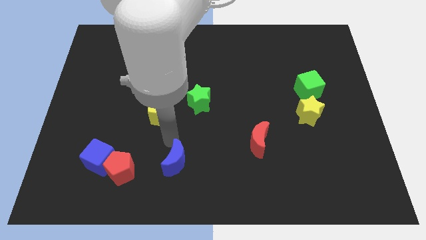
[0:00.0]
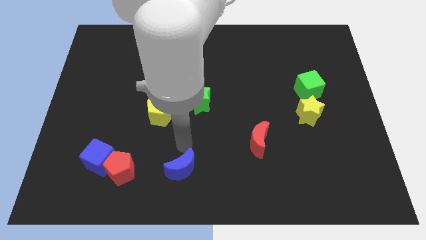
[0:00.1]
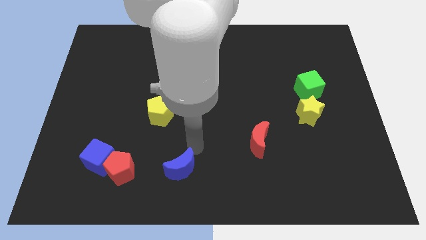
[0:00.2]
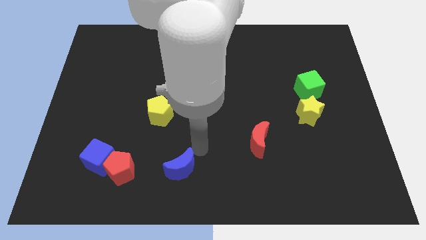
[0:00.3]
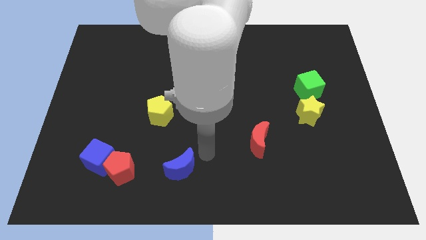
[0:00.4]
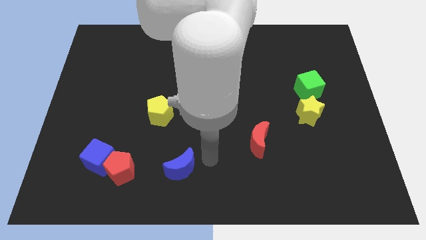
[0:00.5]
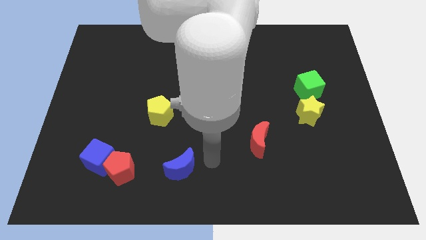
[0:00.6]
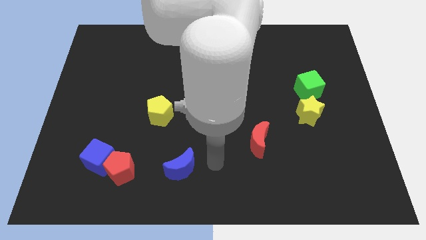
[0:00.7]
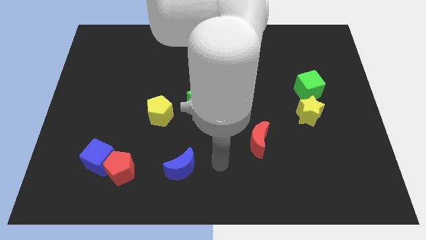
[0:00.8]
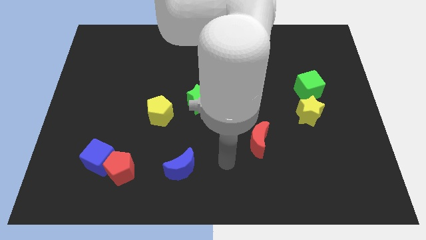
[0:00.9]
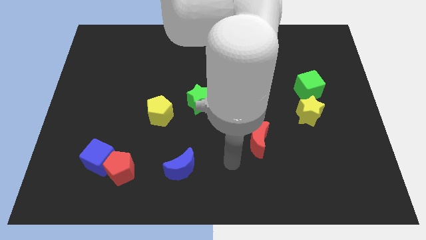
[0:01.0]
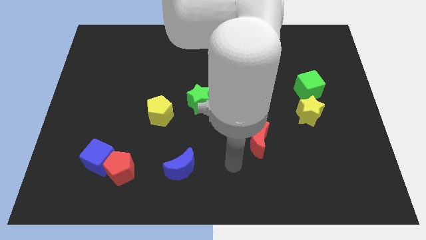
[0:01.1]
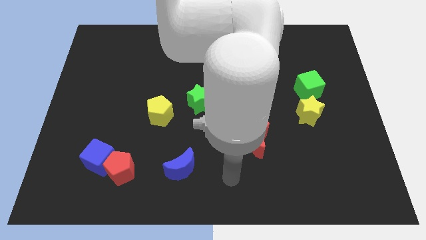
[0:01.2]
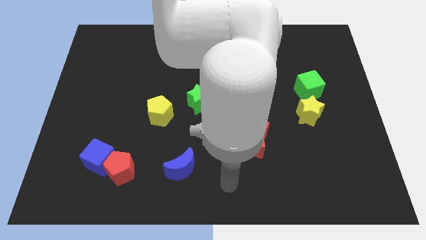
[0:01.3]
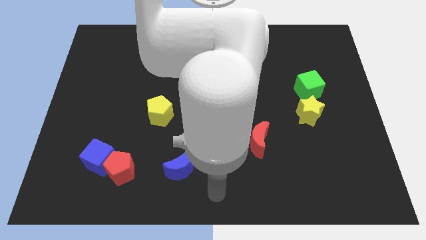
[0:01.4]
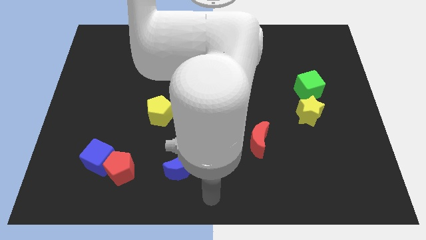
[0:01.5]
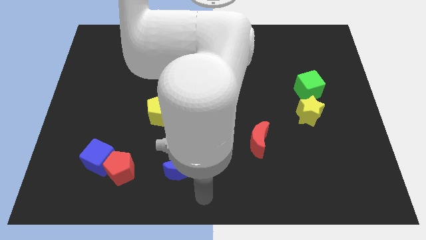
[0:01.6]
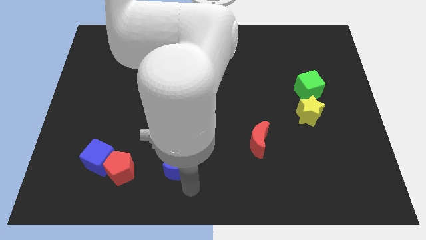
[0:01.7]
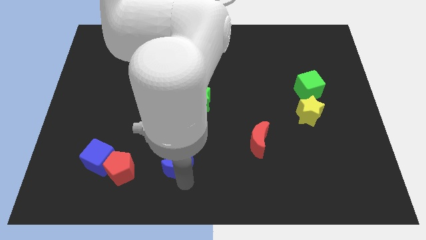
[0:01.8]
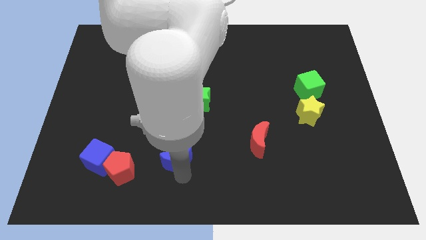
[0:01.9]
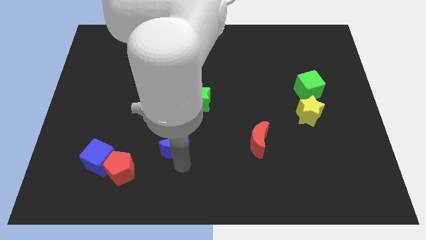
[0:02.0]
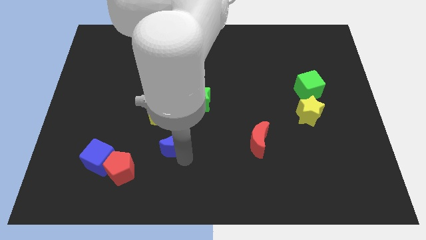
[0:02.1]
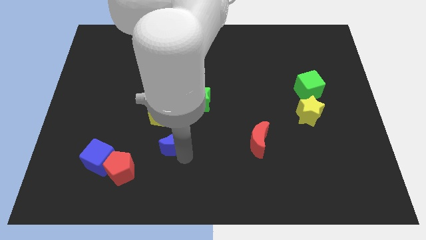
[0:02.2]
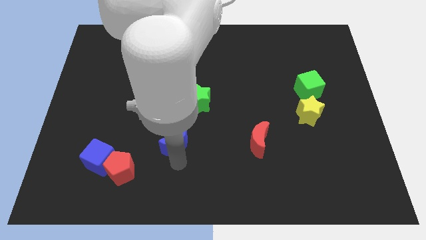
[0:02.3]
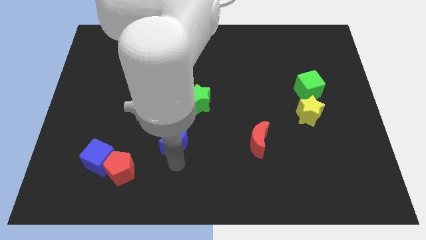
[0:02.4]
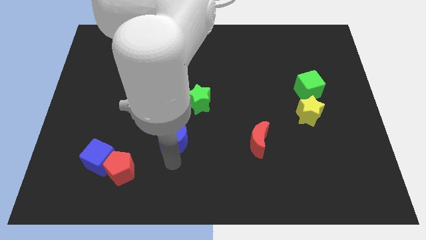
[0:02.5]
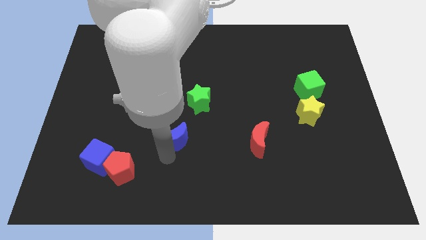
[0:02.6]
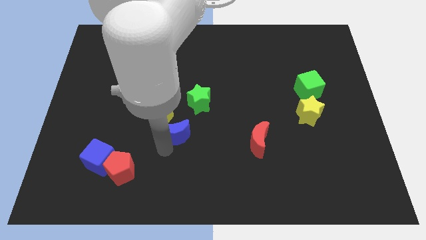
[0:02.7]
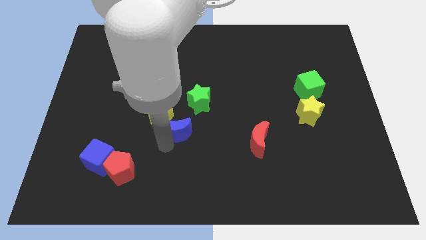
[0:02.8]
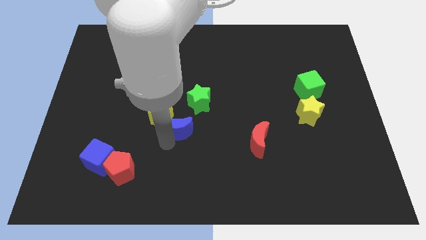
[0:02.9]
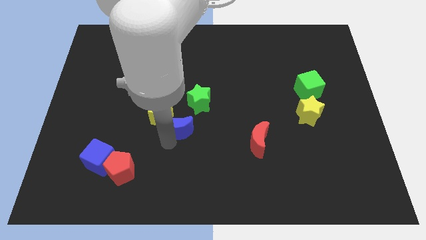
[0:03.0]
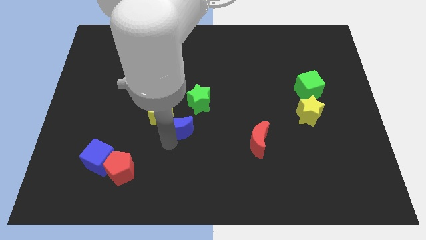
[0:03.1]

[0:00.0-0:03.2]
move the blue moon into the yellow pentagon

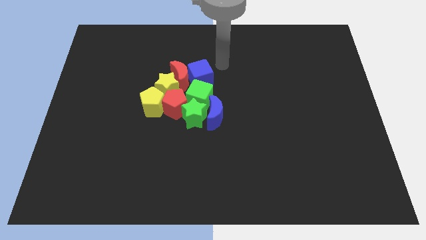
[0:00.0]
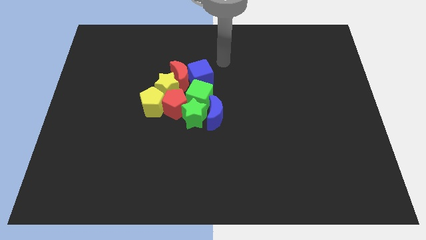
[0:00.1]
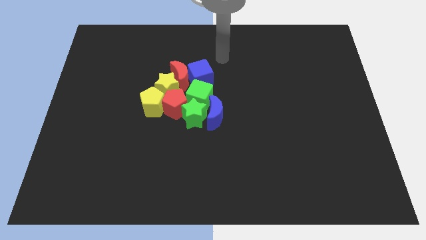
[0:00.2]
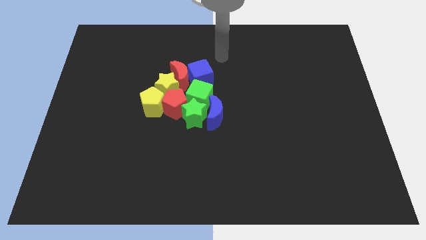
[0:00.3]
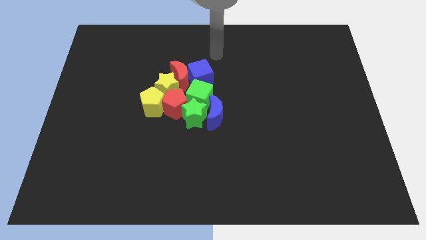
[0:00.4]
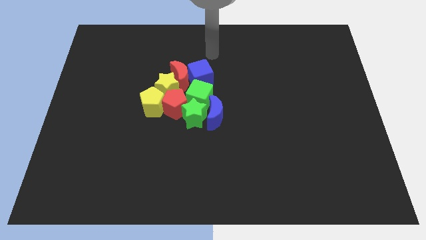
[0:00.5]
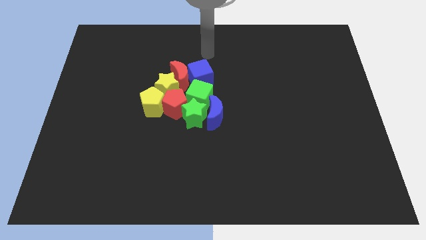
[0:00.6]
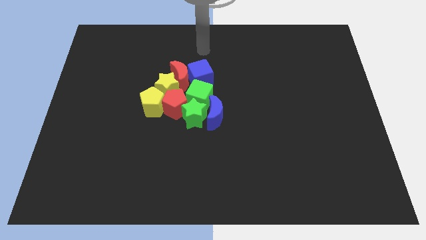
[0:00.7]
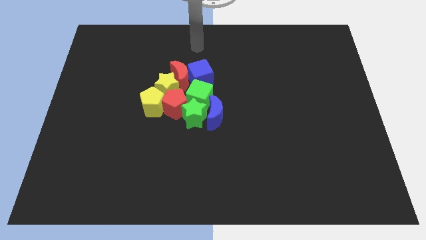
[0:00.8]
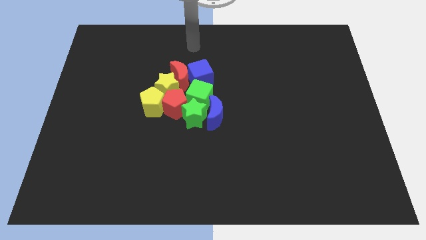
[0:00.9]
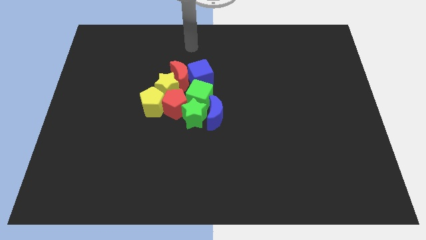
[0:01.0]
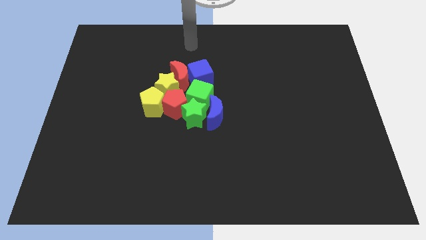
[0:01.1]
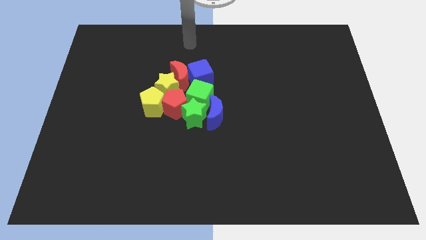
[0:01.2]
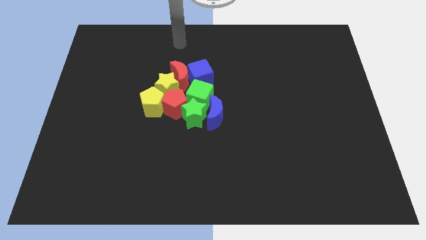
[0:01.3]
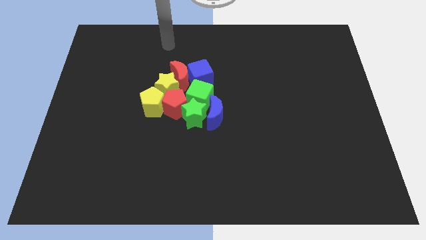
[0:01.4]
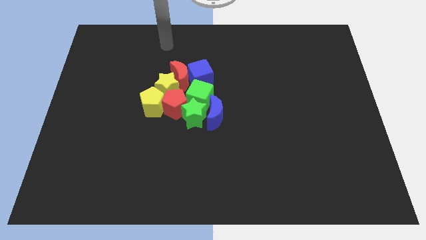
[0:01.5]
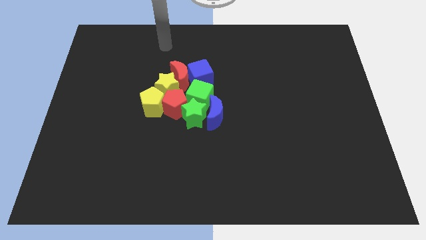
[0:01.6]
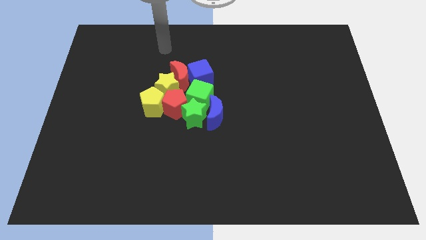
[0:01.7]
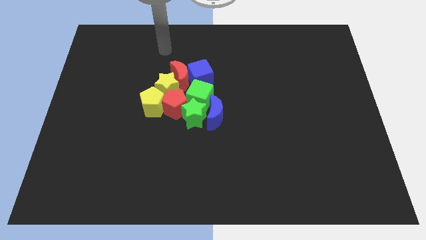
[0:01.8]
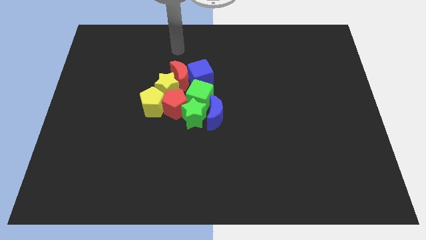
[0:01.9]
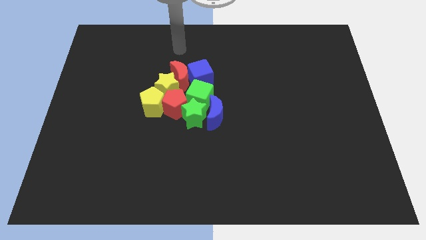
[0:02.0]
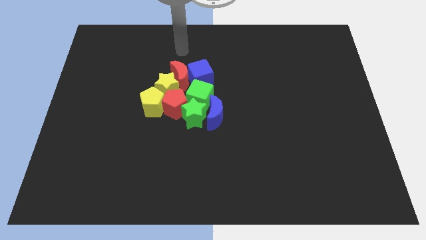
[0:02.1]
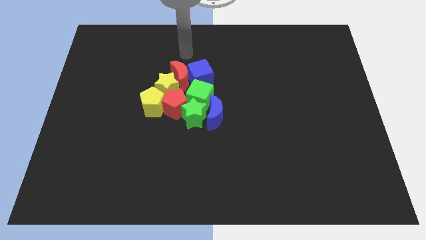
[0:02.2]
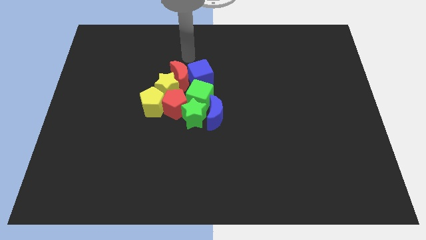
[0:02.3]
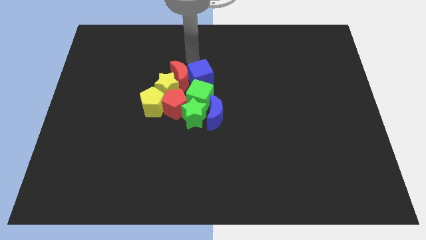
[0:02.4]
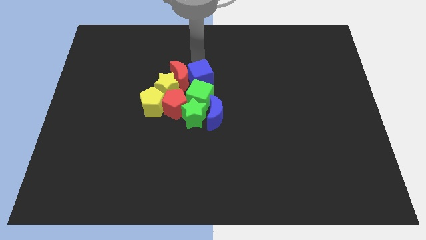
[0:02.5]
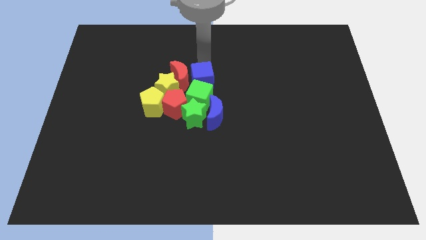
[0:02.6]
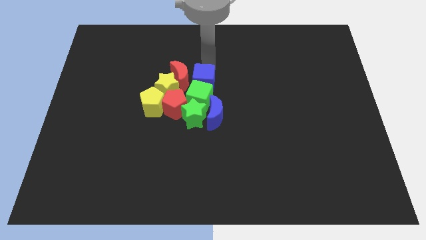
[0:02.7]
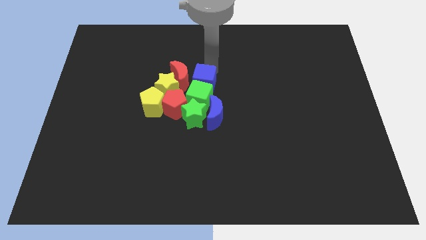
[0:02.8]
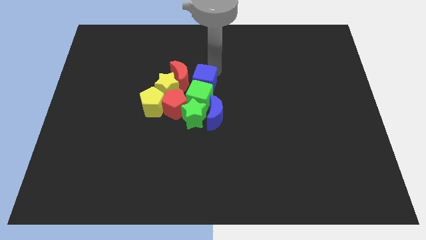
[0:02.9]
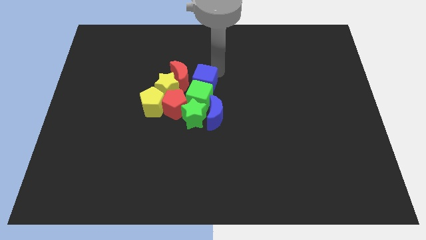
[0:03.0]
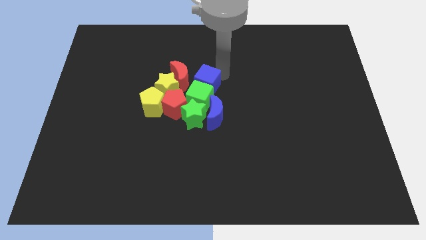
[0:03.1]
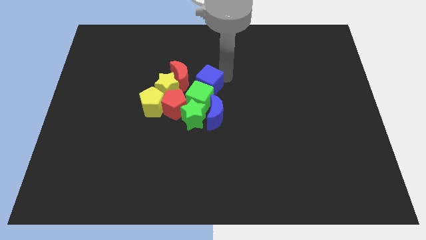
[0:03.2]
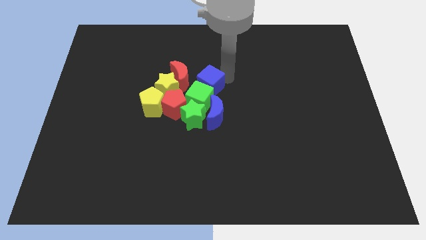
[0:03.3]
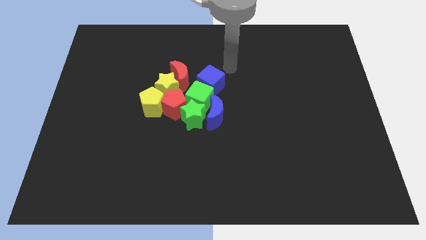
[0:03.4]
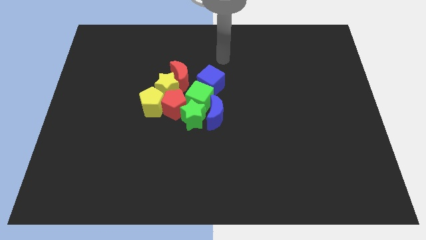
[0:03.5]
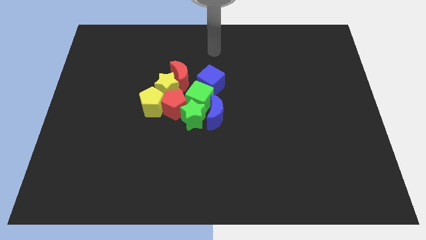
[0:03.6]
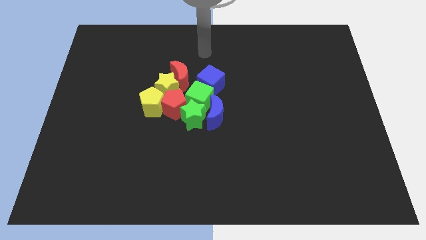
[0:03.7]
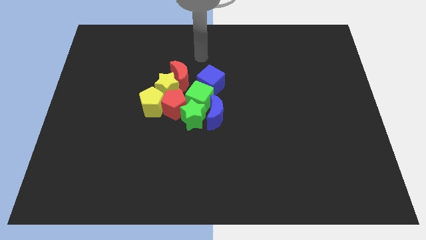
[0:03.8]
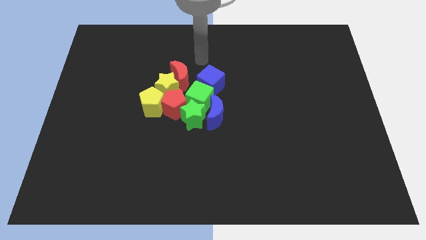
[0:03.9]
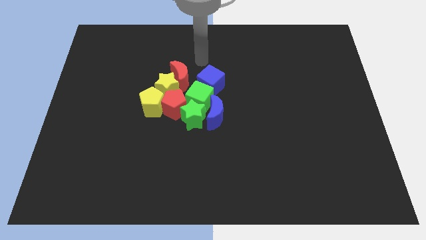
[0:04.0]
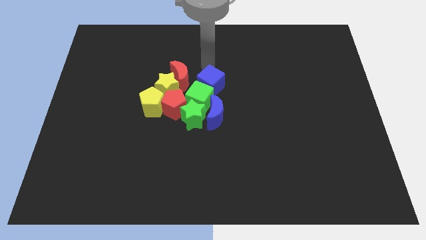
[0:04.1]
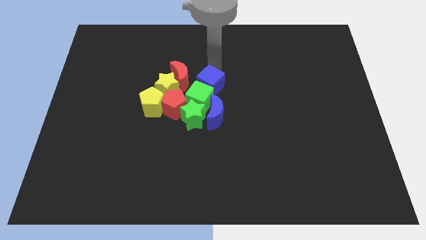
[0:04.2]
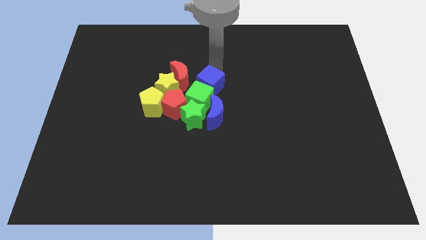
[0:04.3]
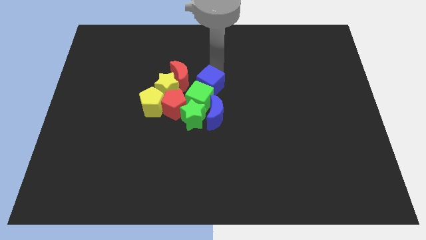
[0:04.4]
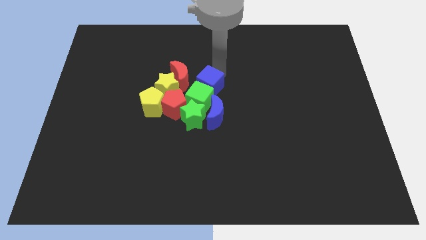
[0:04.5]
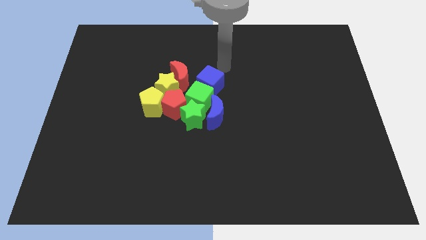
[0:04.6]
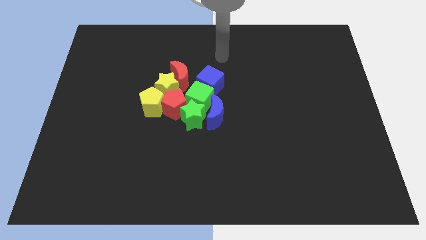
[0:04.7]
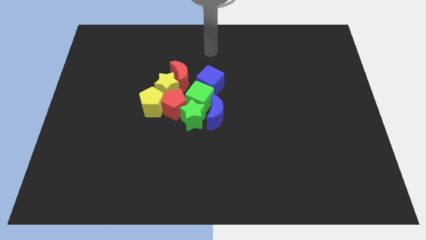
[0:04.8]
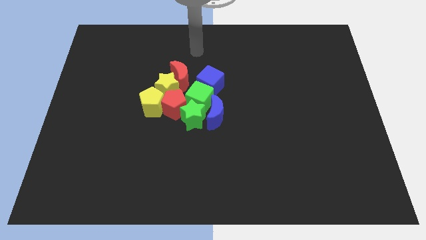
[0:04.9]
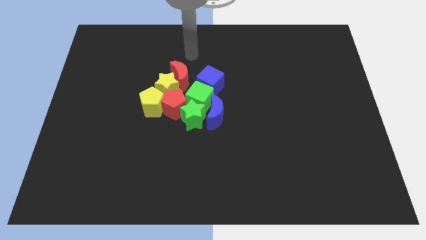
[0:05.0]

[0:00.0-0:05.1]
push the blue cube into the green cube

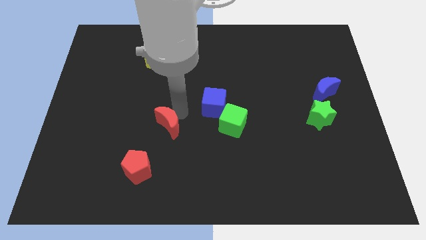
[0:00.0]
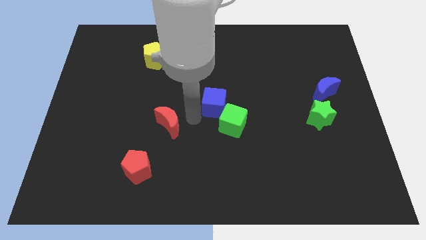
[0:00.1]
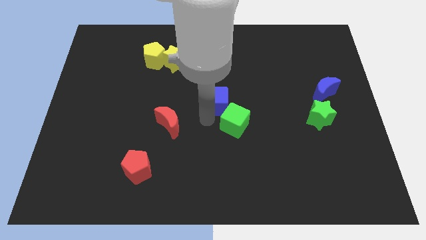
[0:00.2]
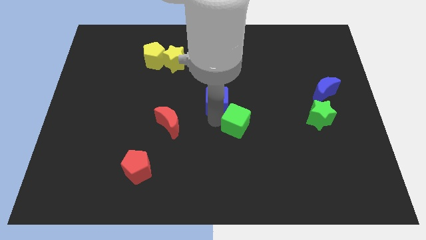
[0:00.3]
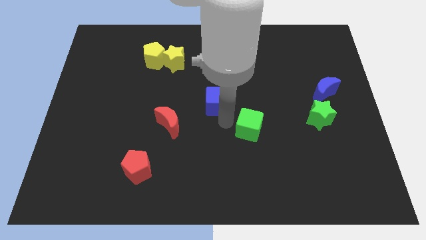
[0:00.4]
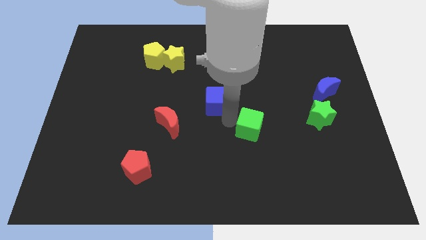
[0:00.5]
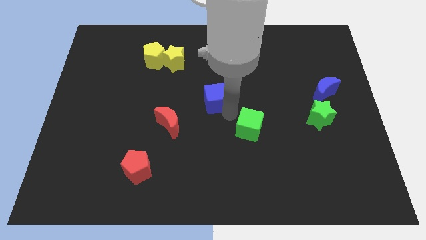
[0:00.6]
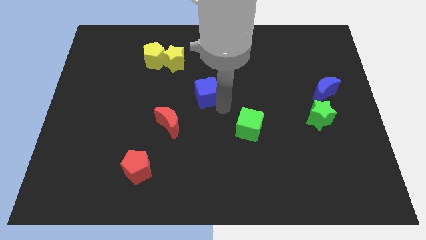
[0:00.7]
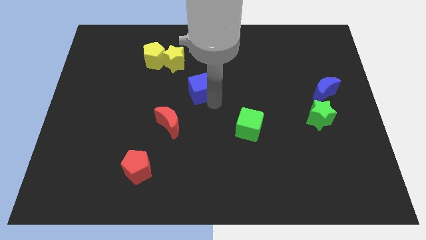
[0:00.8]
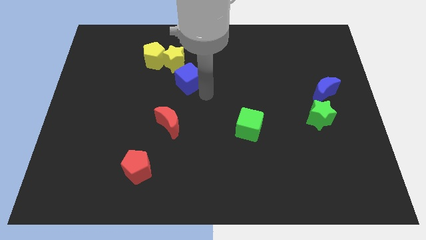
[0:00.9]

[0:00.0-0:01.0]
separate blue cube from green cube
